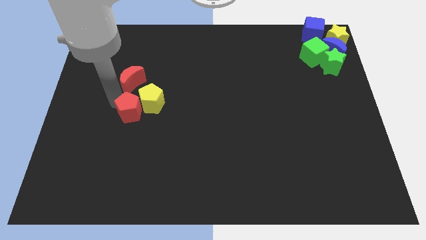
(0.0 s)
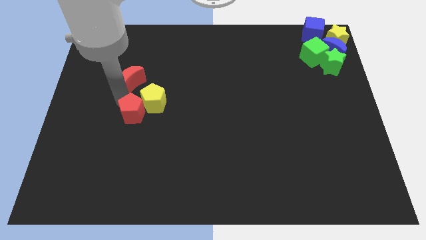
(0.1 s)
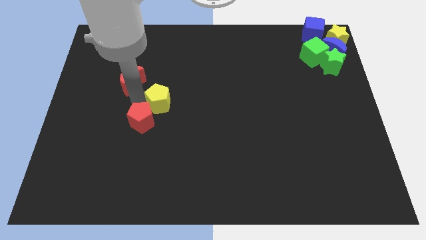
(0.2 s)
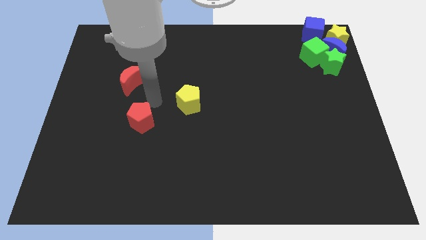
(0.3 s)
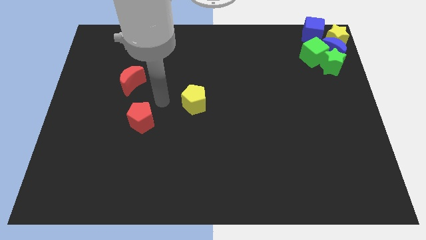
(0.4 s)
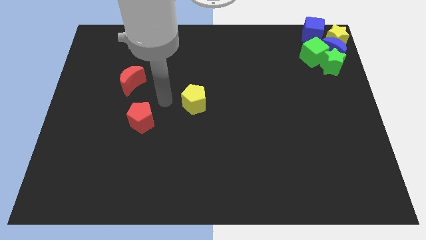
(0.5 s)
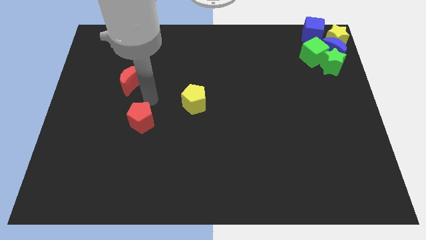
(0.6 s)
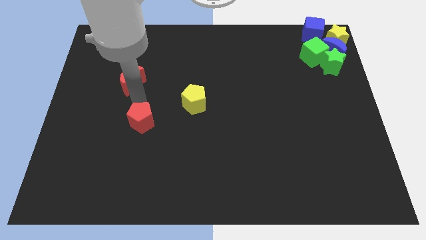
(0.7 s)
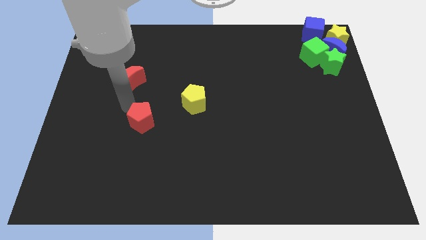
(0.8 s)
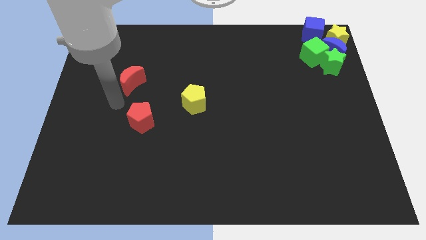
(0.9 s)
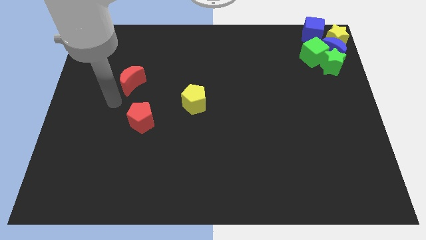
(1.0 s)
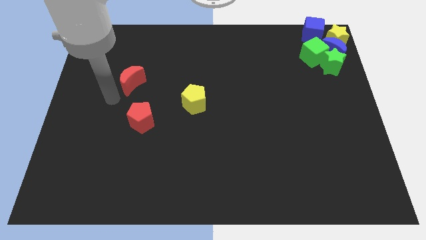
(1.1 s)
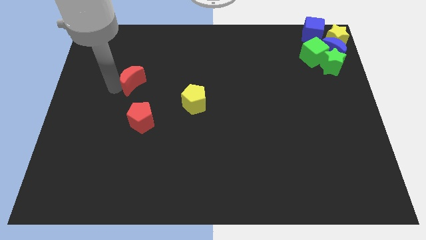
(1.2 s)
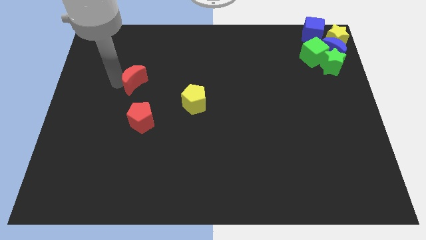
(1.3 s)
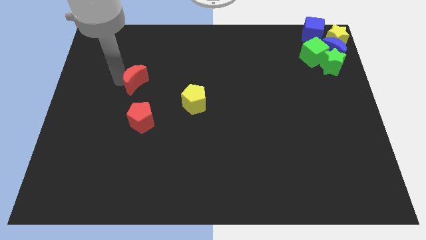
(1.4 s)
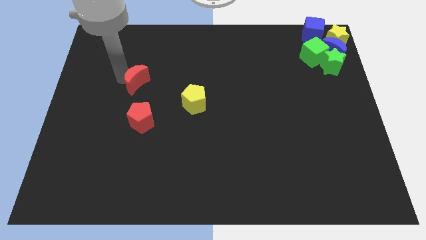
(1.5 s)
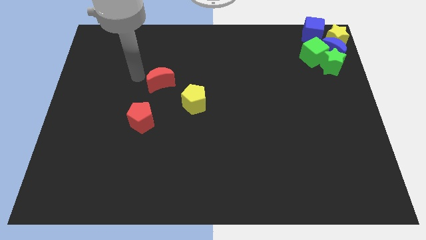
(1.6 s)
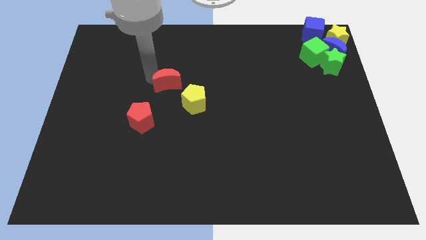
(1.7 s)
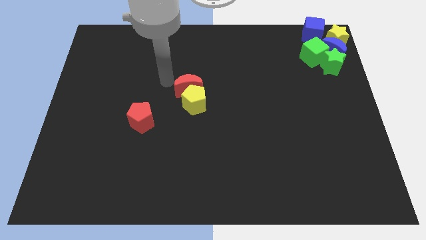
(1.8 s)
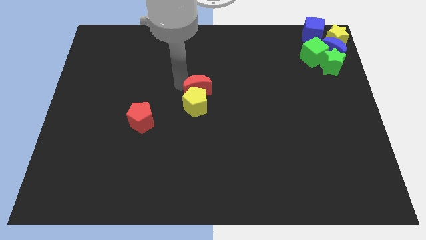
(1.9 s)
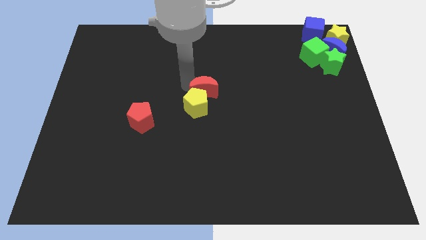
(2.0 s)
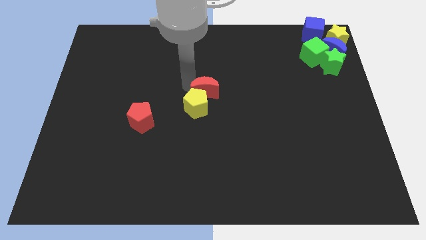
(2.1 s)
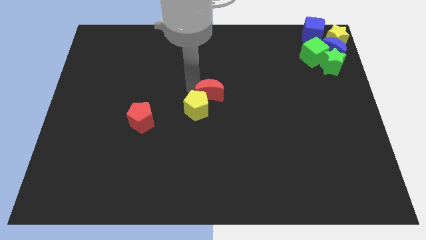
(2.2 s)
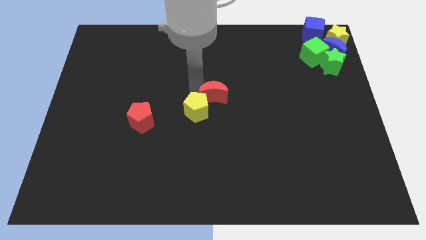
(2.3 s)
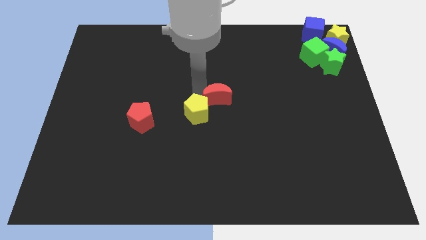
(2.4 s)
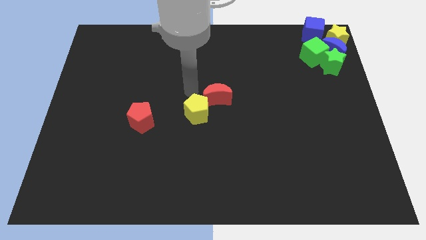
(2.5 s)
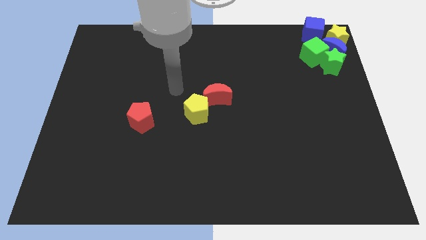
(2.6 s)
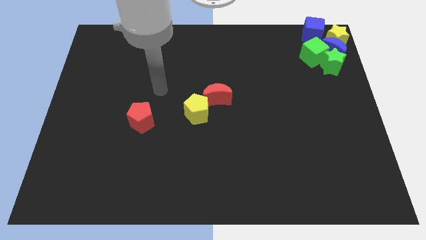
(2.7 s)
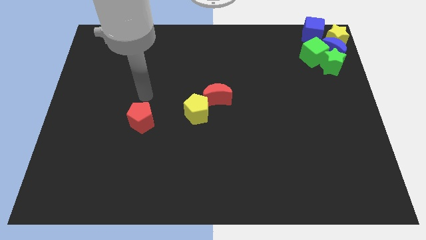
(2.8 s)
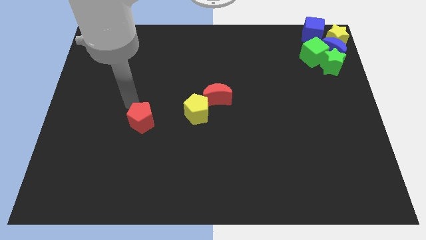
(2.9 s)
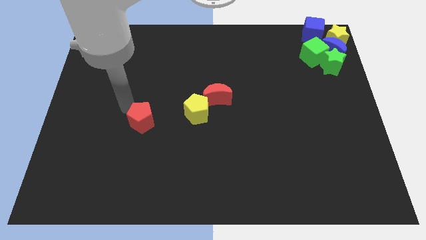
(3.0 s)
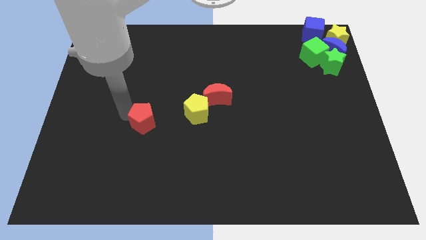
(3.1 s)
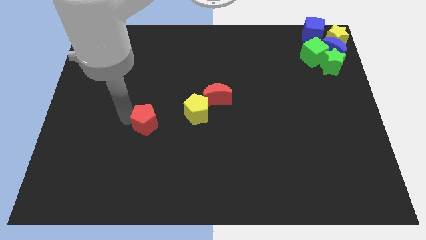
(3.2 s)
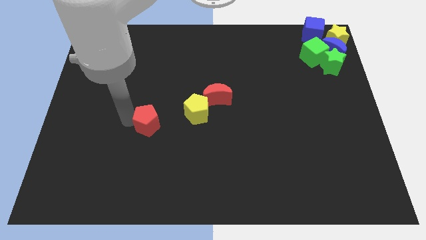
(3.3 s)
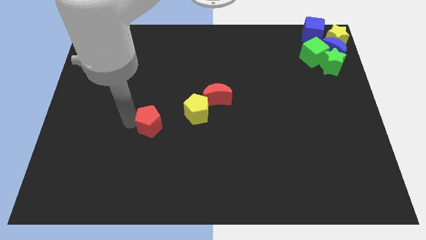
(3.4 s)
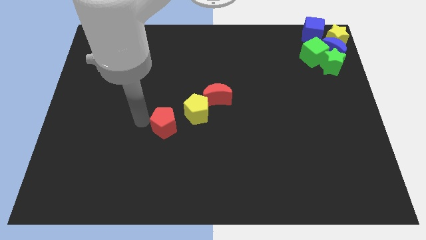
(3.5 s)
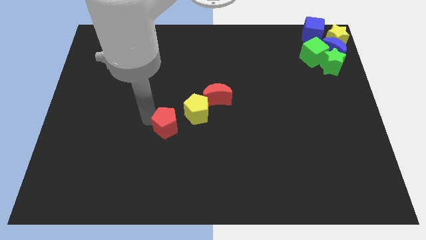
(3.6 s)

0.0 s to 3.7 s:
push the red blocks and yellow pentagon towards the center

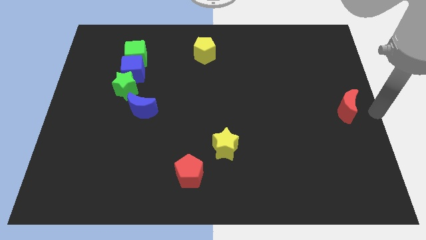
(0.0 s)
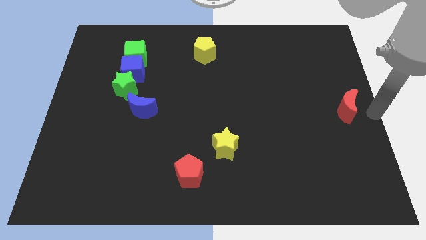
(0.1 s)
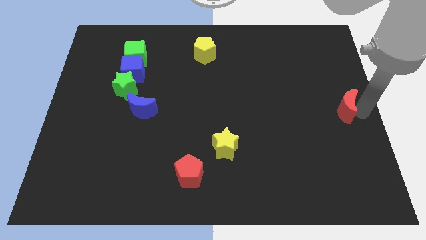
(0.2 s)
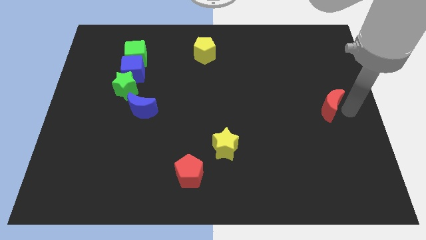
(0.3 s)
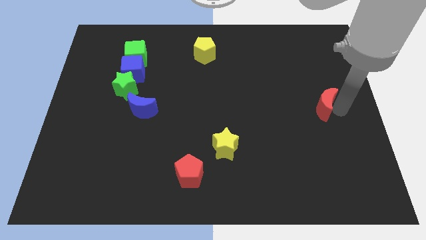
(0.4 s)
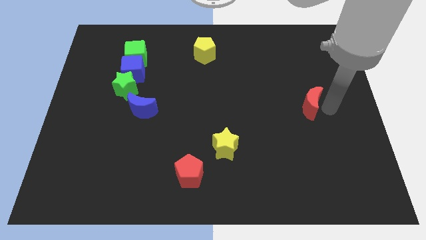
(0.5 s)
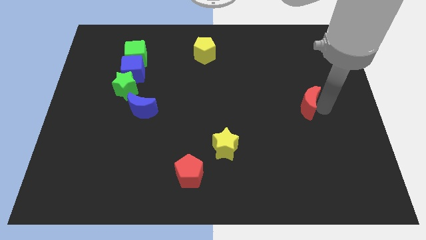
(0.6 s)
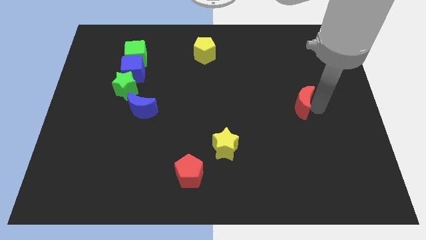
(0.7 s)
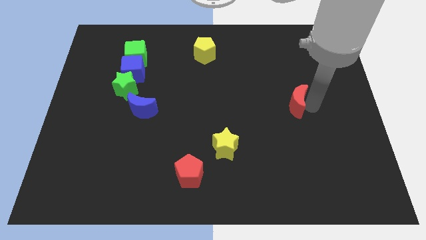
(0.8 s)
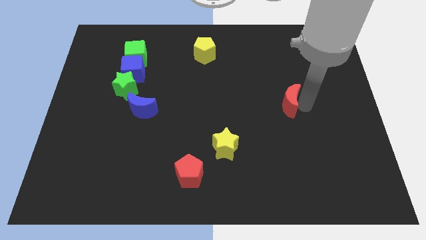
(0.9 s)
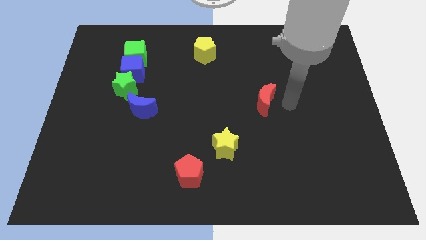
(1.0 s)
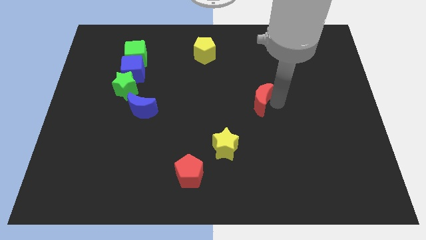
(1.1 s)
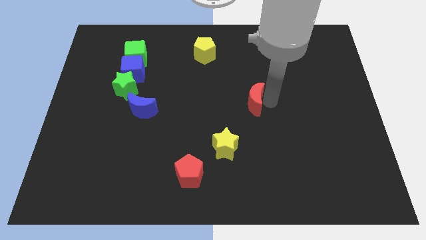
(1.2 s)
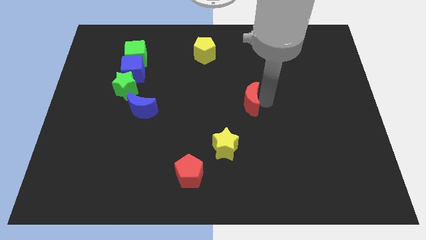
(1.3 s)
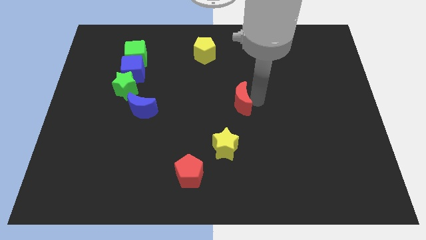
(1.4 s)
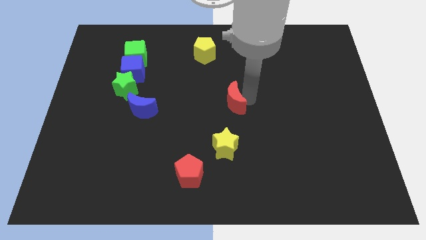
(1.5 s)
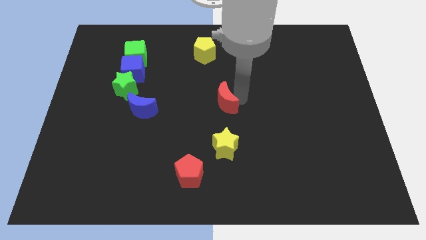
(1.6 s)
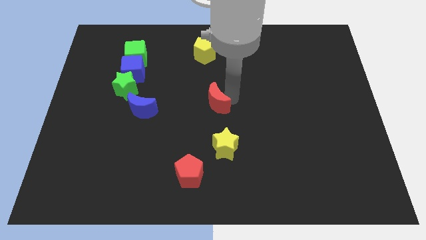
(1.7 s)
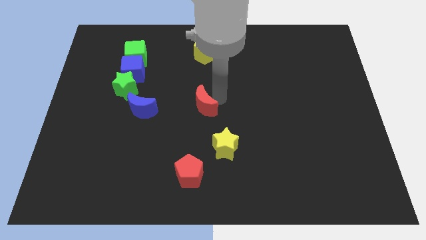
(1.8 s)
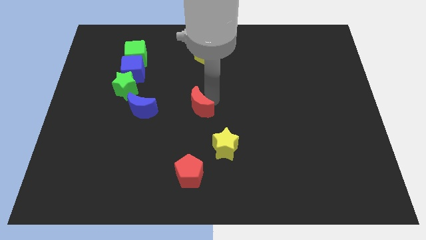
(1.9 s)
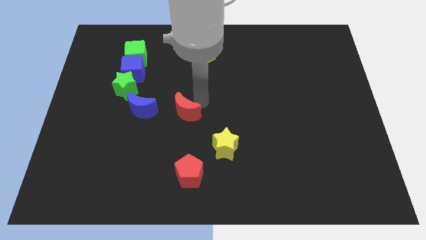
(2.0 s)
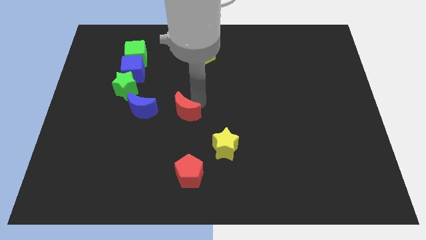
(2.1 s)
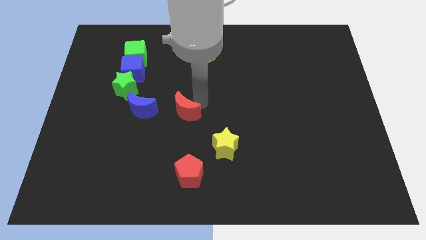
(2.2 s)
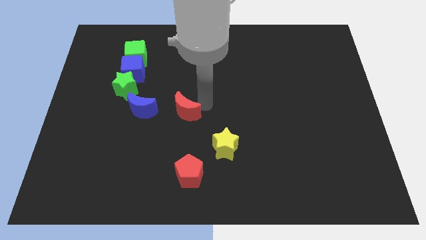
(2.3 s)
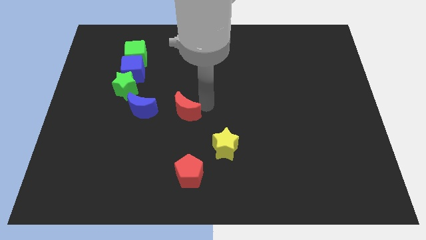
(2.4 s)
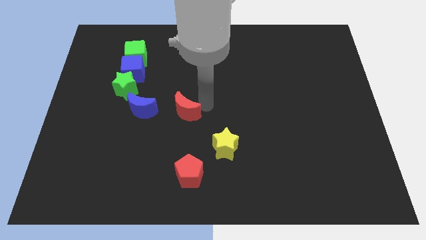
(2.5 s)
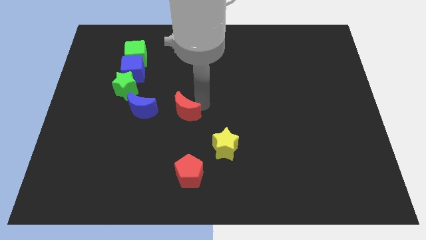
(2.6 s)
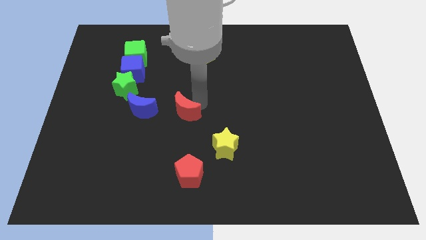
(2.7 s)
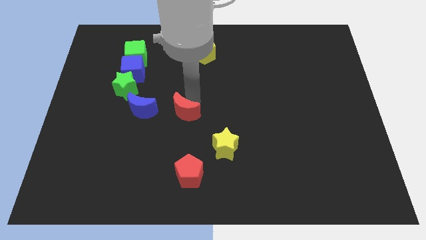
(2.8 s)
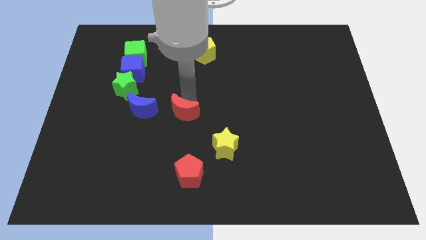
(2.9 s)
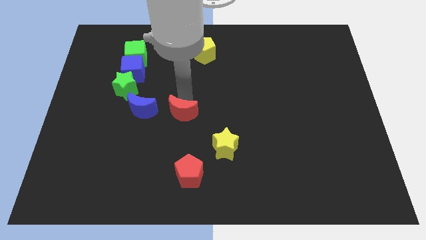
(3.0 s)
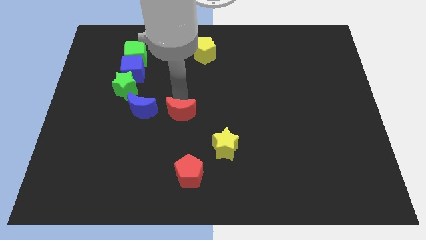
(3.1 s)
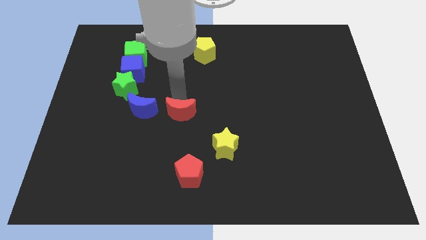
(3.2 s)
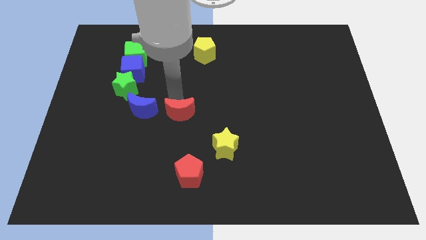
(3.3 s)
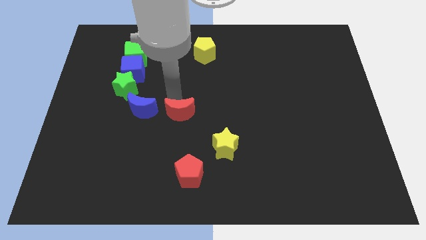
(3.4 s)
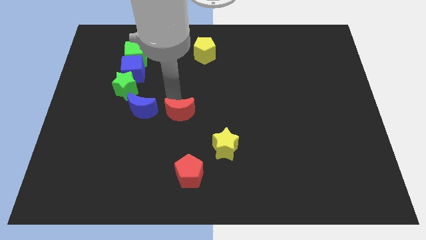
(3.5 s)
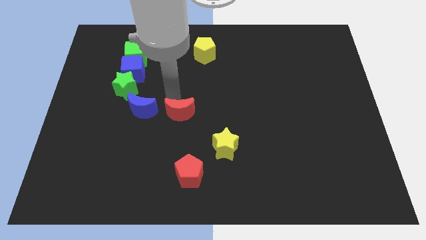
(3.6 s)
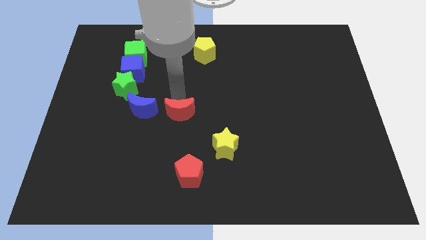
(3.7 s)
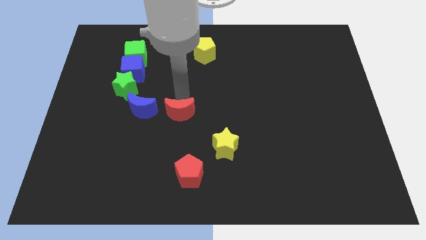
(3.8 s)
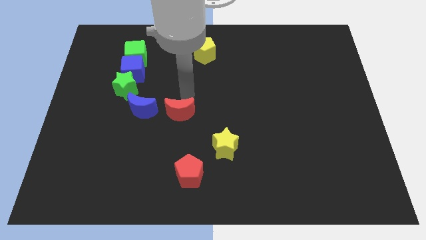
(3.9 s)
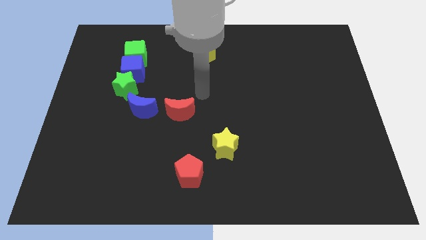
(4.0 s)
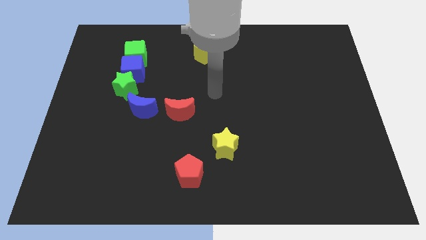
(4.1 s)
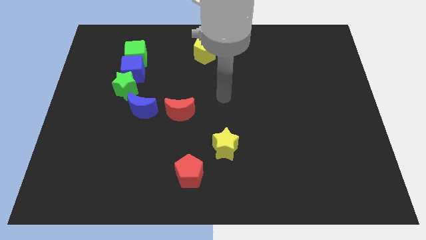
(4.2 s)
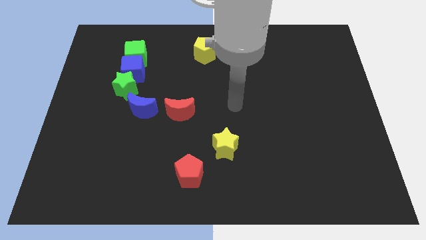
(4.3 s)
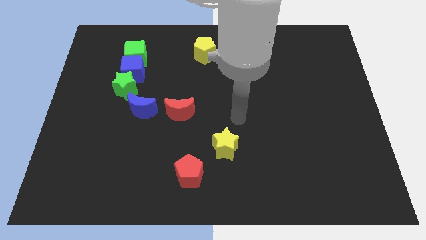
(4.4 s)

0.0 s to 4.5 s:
push the red crescent to the right of the blue crescent

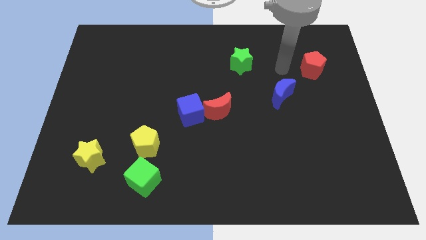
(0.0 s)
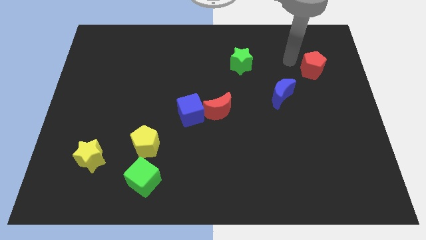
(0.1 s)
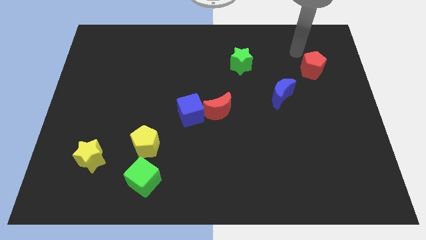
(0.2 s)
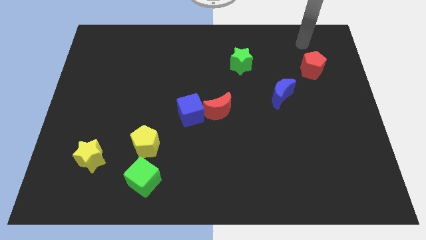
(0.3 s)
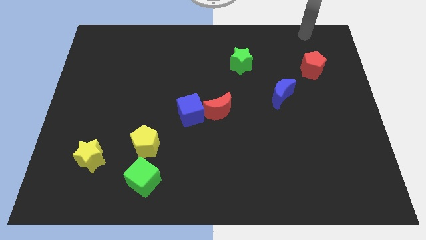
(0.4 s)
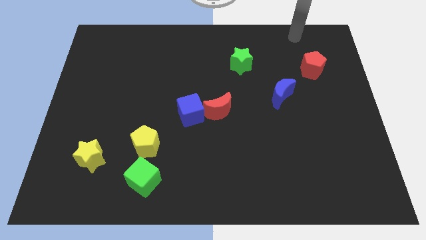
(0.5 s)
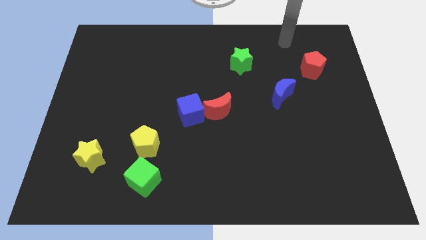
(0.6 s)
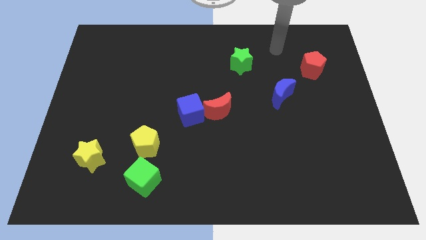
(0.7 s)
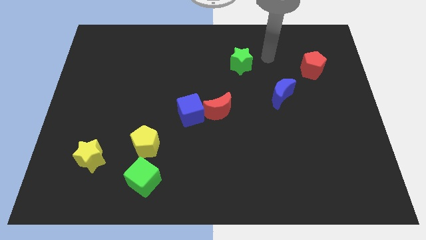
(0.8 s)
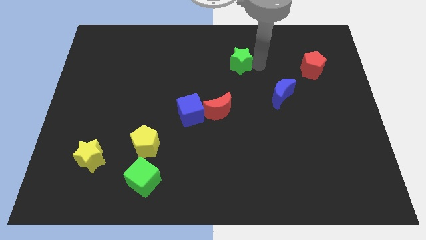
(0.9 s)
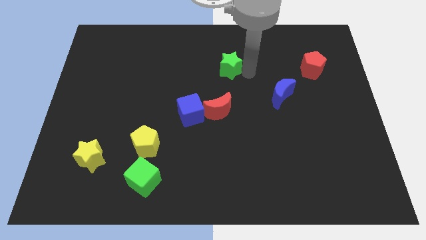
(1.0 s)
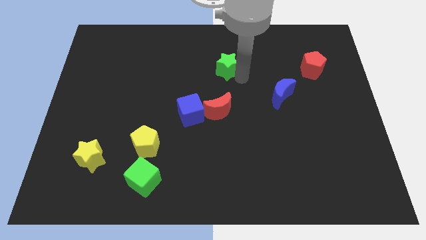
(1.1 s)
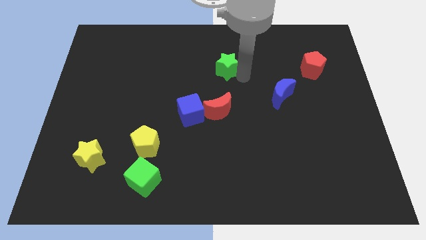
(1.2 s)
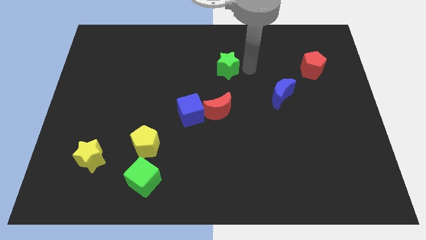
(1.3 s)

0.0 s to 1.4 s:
push the green star above the red moon
